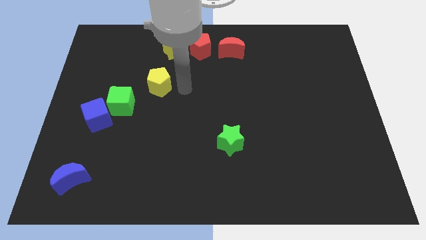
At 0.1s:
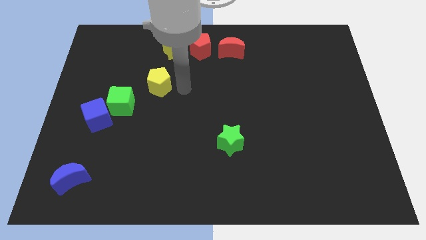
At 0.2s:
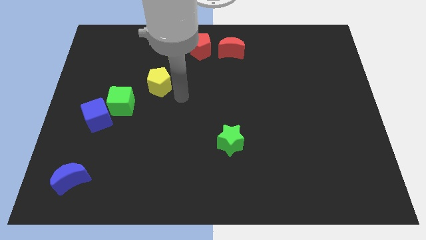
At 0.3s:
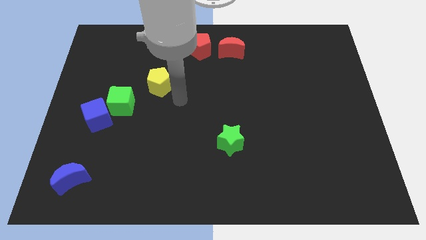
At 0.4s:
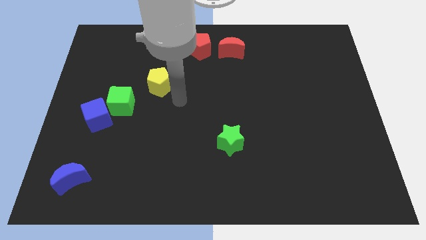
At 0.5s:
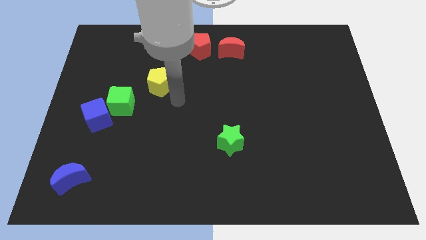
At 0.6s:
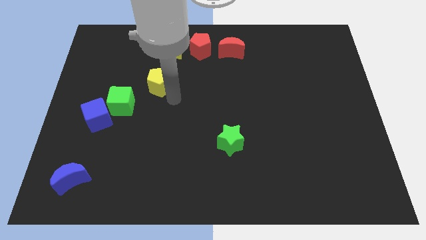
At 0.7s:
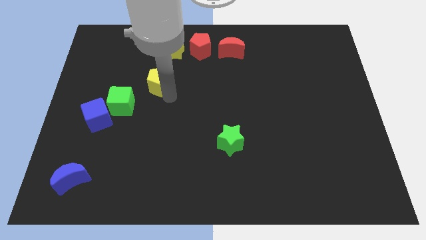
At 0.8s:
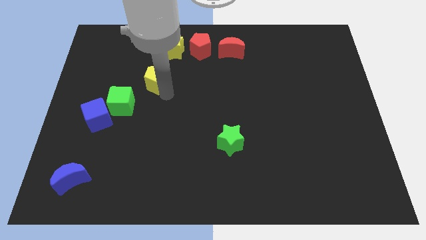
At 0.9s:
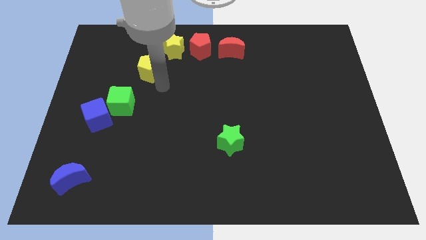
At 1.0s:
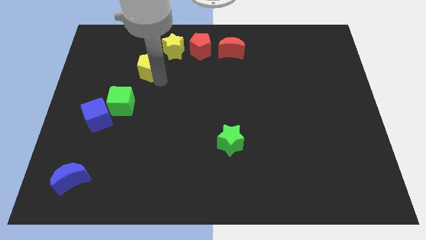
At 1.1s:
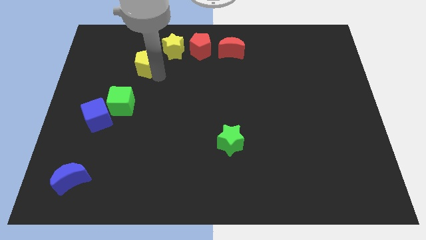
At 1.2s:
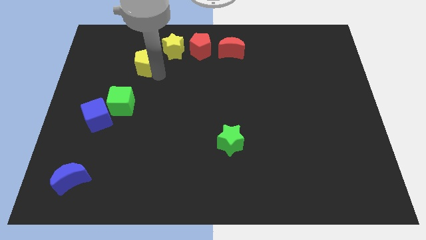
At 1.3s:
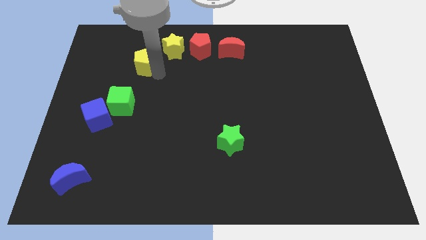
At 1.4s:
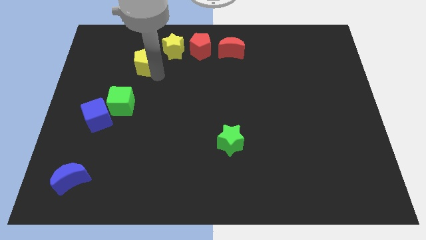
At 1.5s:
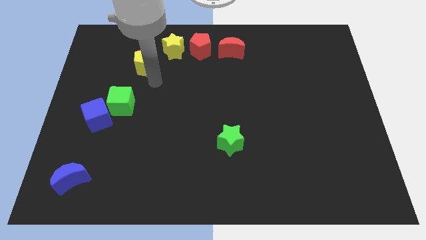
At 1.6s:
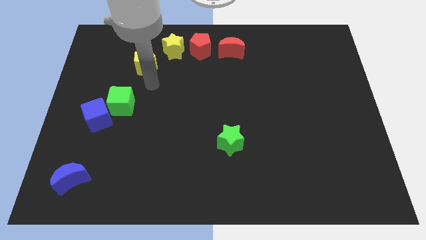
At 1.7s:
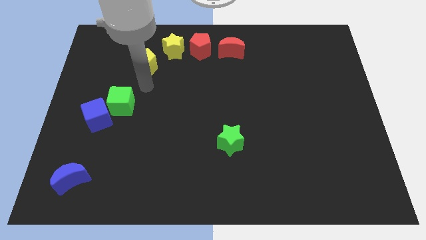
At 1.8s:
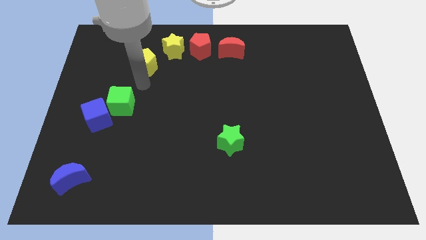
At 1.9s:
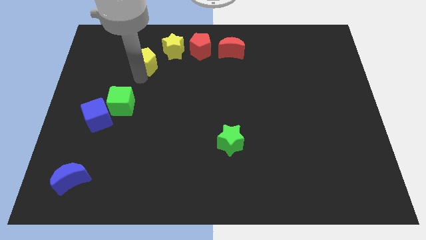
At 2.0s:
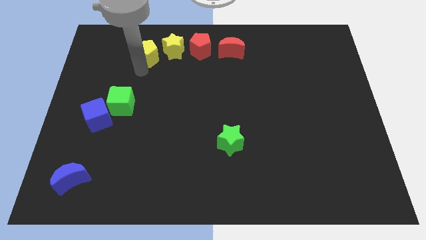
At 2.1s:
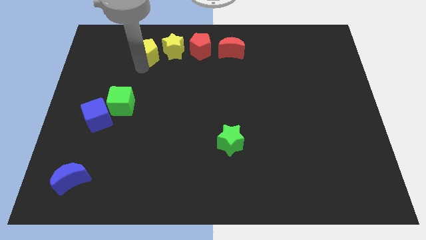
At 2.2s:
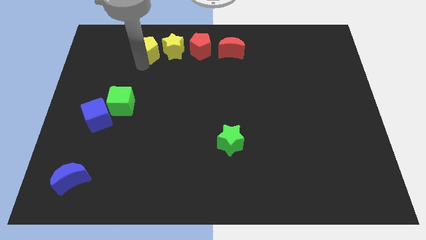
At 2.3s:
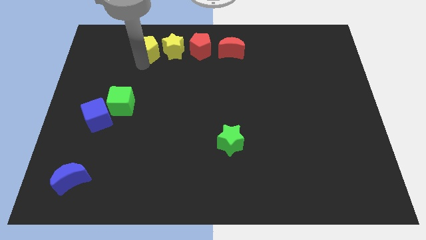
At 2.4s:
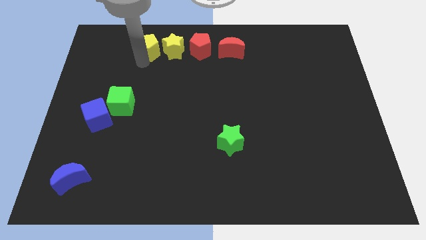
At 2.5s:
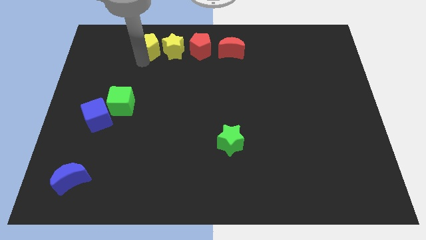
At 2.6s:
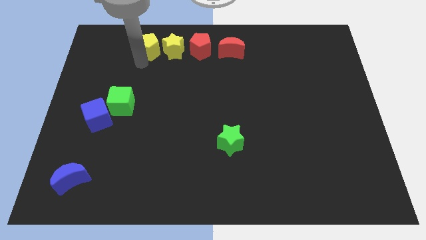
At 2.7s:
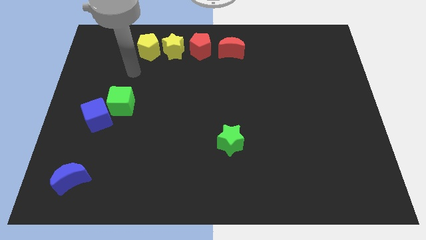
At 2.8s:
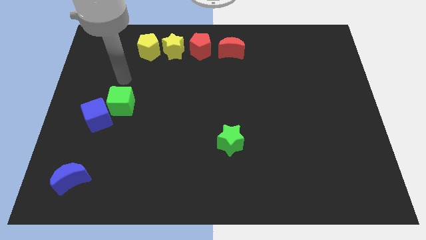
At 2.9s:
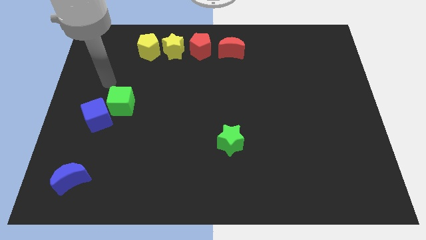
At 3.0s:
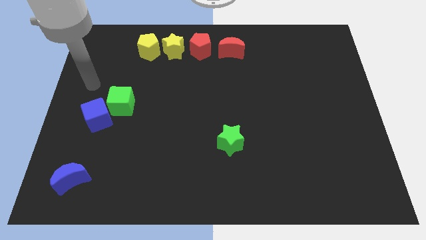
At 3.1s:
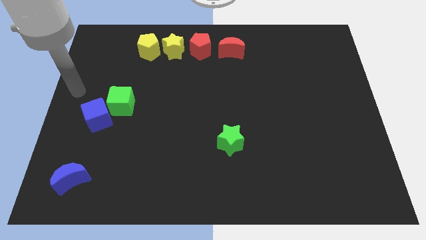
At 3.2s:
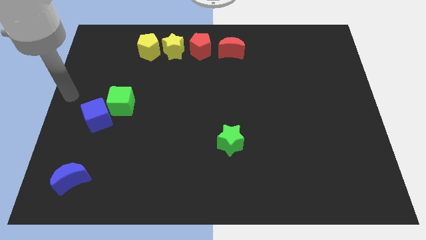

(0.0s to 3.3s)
put the yellow pentagon on the left side of the yellow star

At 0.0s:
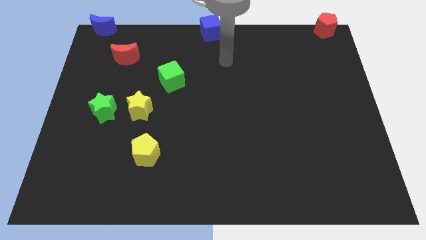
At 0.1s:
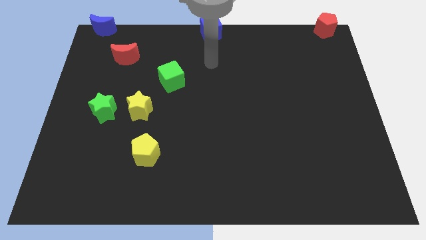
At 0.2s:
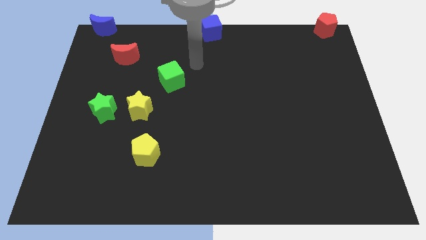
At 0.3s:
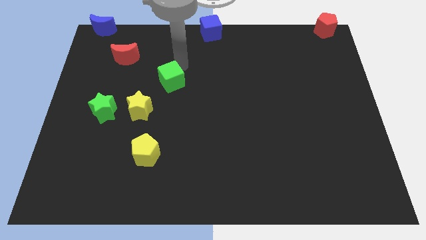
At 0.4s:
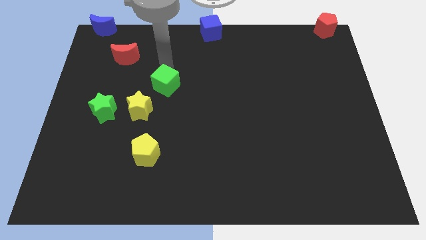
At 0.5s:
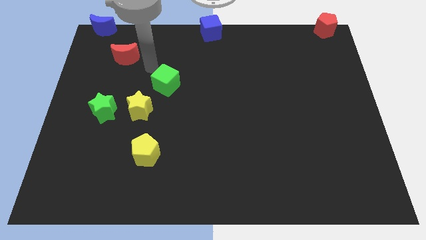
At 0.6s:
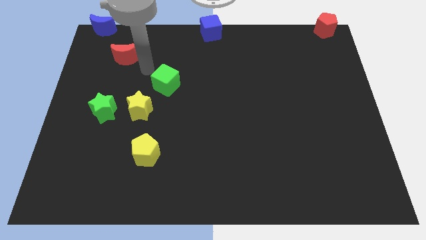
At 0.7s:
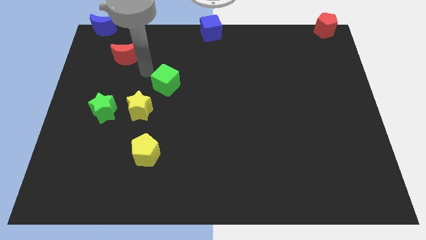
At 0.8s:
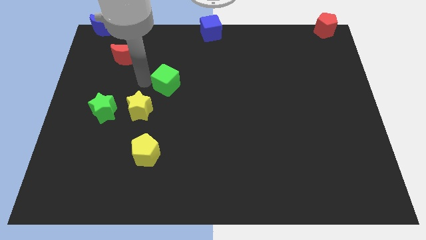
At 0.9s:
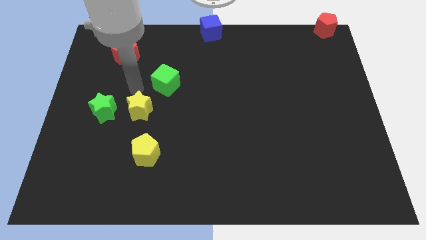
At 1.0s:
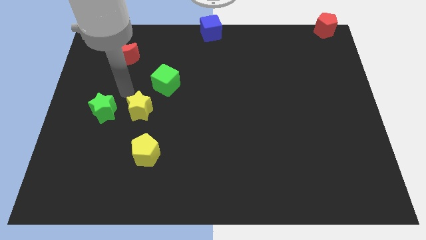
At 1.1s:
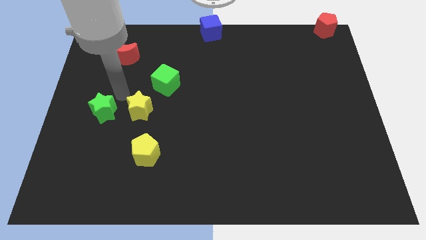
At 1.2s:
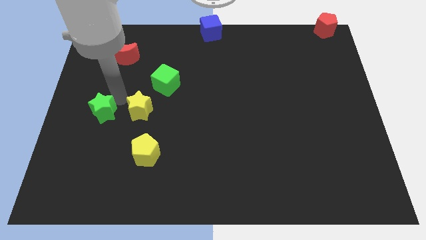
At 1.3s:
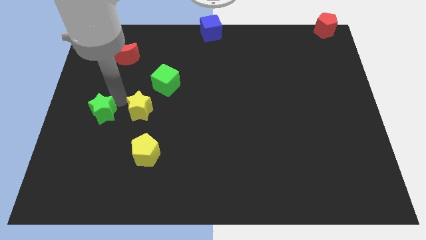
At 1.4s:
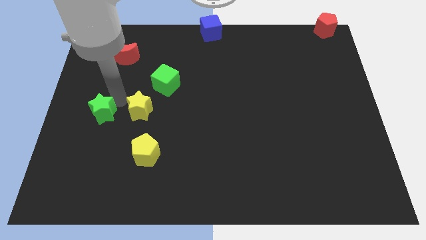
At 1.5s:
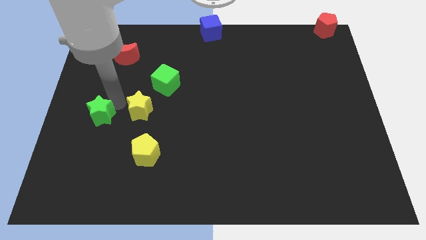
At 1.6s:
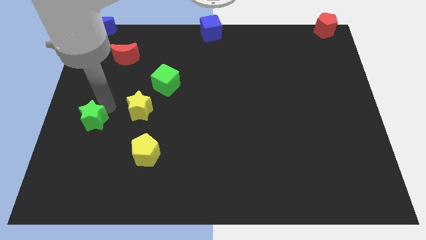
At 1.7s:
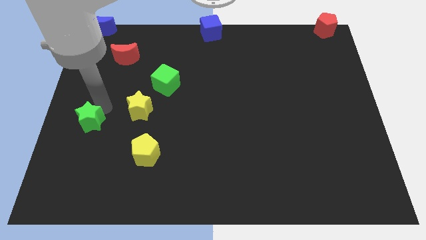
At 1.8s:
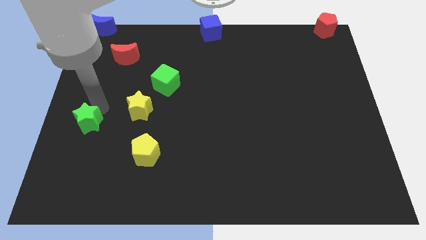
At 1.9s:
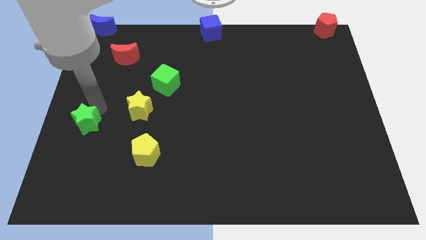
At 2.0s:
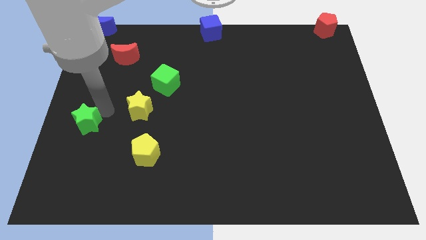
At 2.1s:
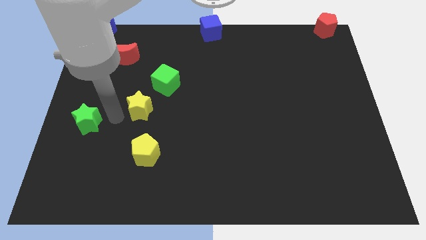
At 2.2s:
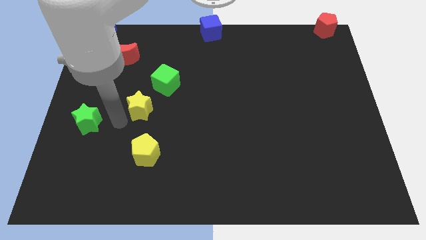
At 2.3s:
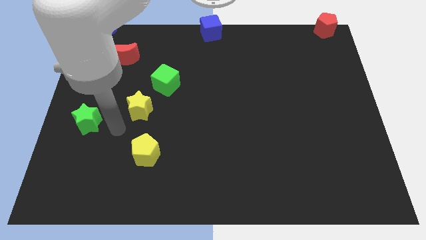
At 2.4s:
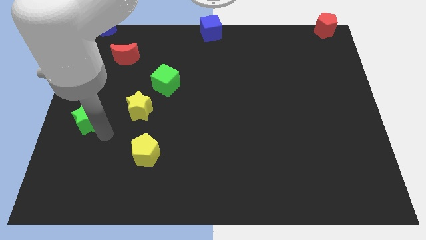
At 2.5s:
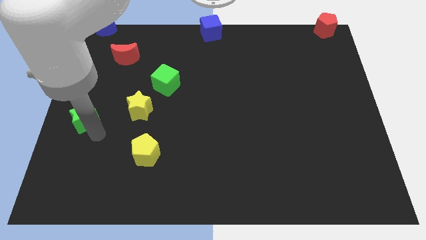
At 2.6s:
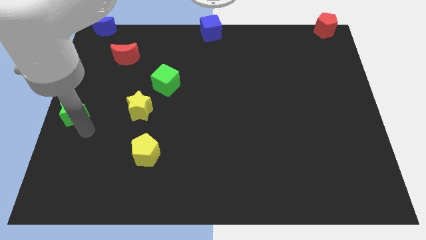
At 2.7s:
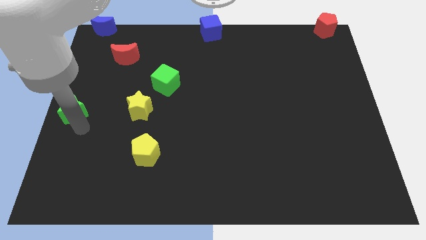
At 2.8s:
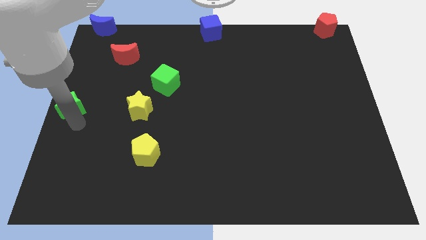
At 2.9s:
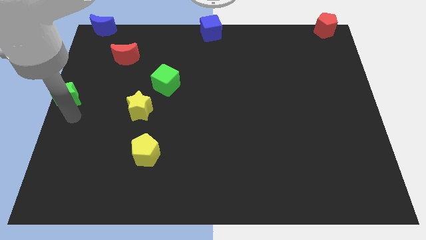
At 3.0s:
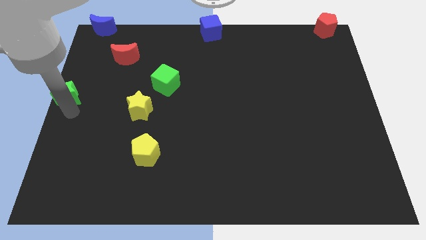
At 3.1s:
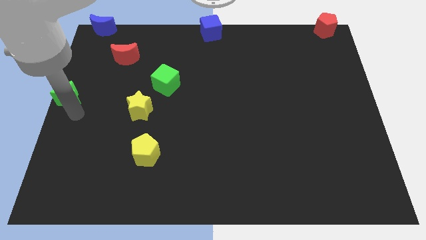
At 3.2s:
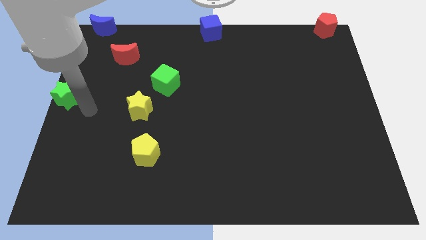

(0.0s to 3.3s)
slide the green star to the center left

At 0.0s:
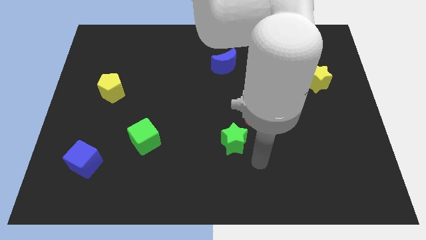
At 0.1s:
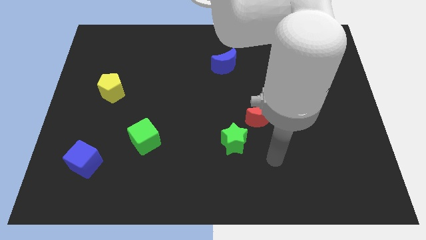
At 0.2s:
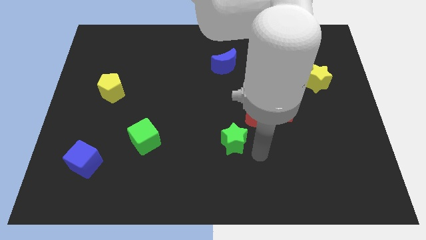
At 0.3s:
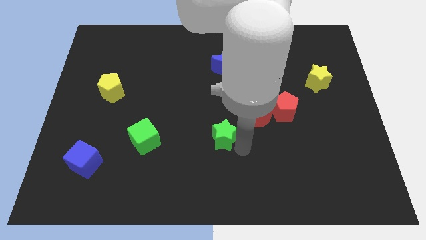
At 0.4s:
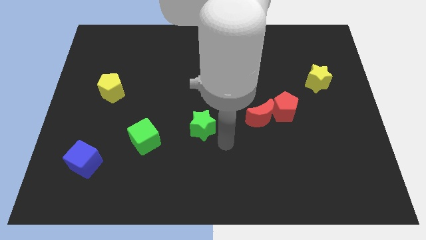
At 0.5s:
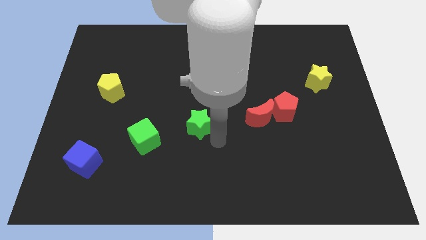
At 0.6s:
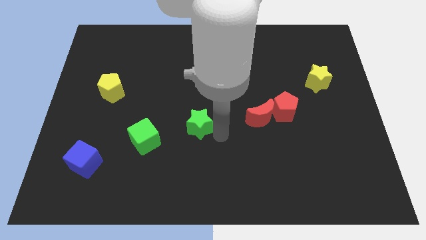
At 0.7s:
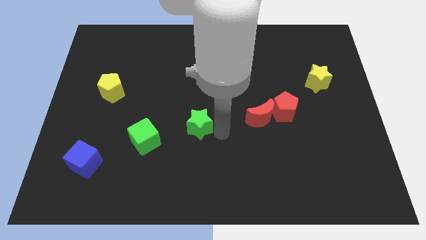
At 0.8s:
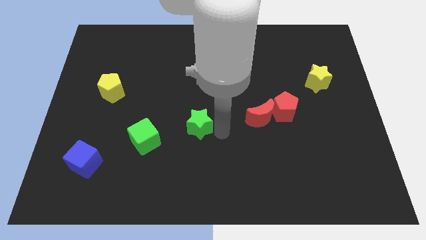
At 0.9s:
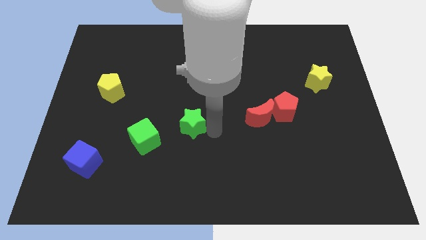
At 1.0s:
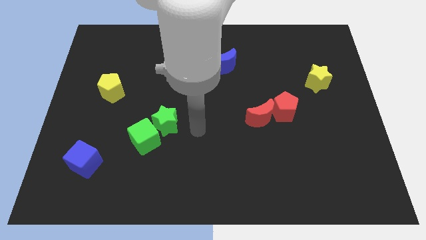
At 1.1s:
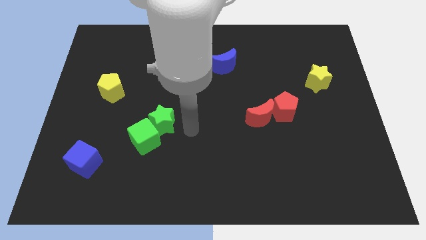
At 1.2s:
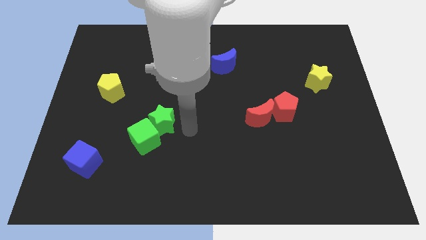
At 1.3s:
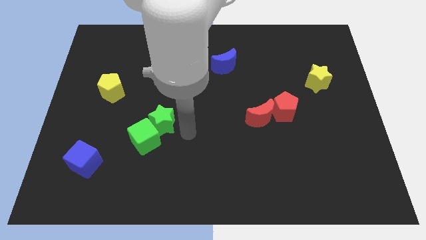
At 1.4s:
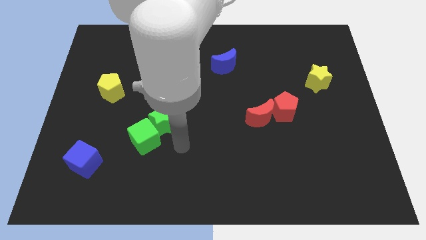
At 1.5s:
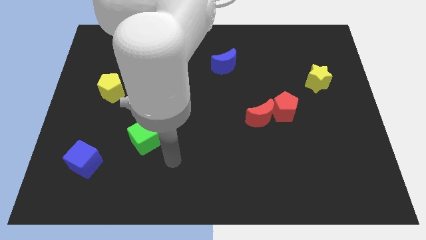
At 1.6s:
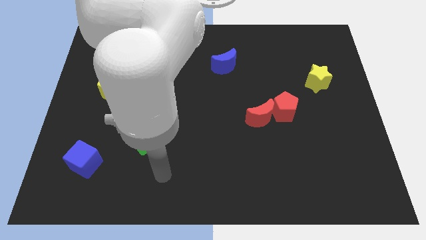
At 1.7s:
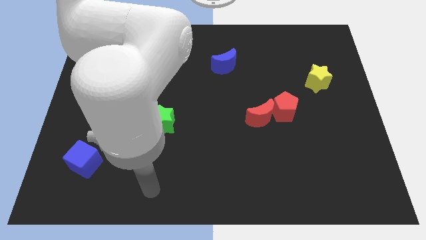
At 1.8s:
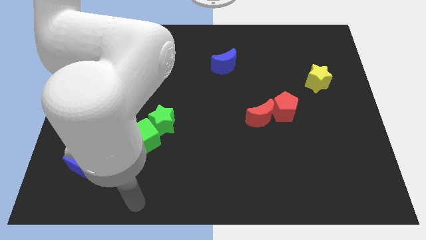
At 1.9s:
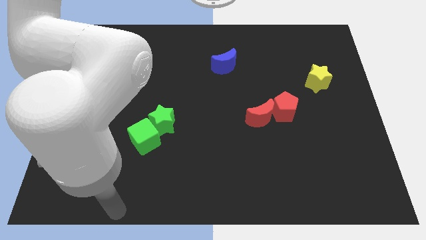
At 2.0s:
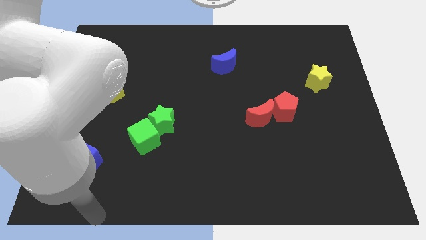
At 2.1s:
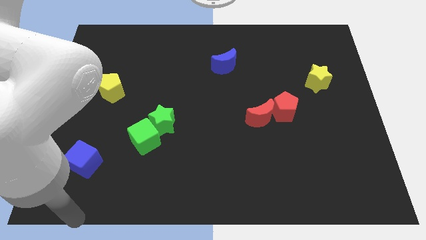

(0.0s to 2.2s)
place the arm towards the bottom left

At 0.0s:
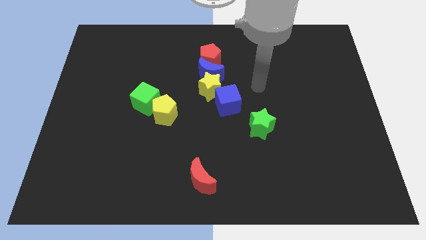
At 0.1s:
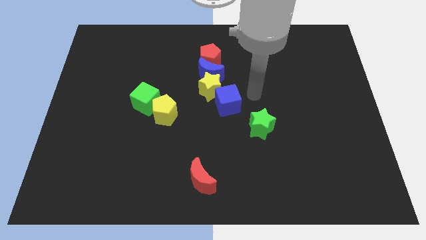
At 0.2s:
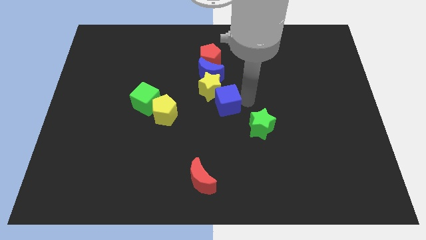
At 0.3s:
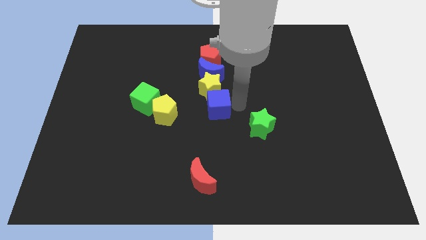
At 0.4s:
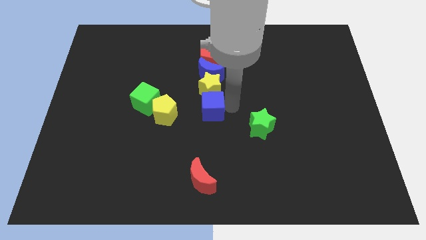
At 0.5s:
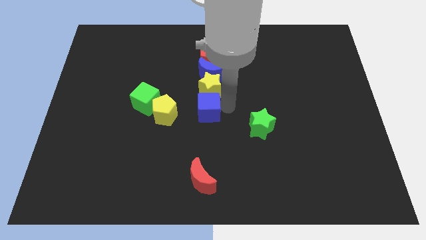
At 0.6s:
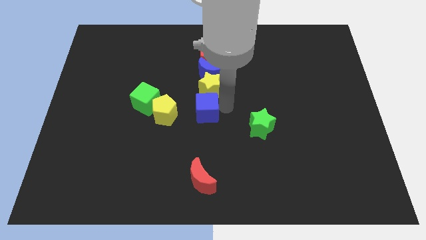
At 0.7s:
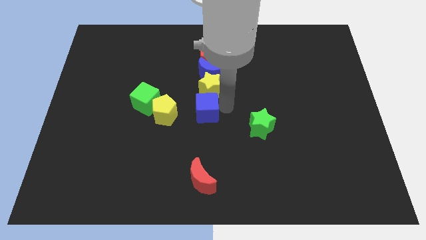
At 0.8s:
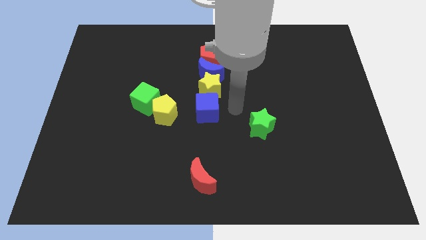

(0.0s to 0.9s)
put the blue cube parallel to the yellow pentagon
